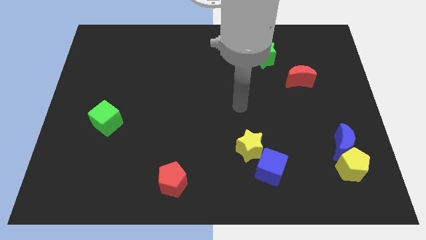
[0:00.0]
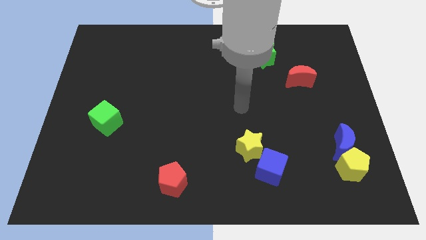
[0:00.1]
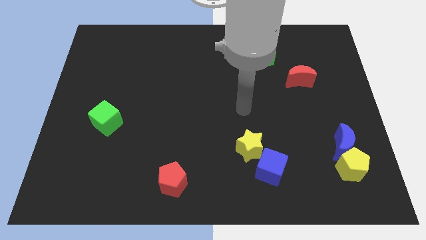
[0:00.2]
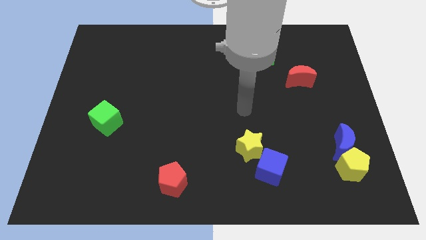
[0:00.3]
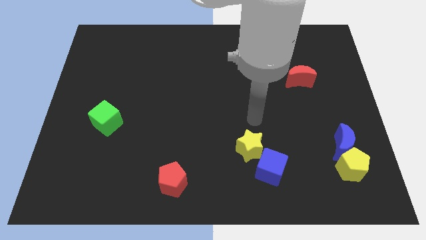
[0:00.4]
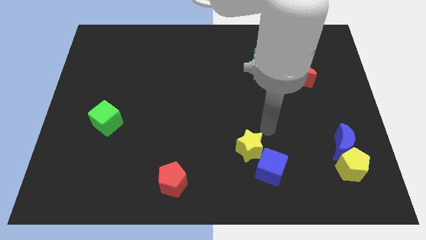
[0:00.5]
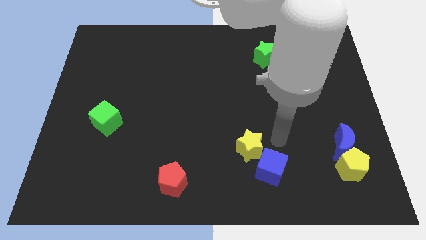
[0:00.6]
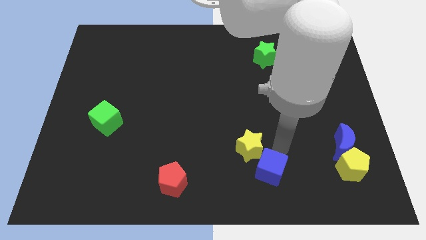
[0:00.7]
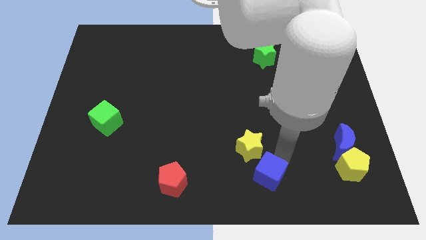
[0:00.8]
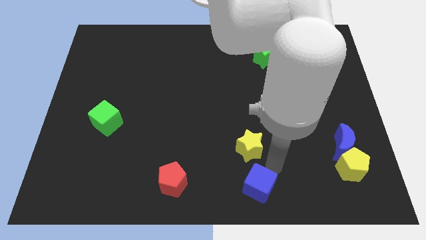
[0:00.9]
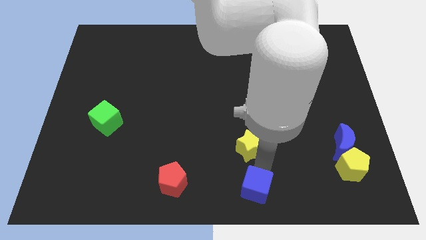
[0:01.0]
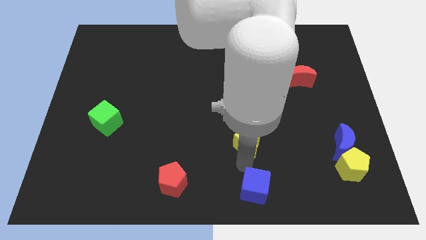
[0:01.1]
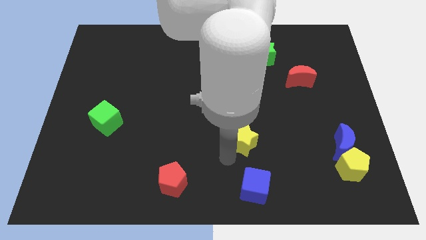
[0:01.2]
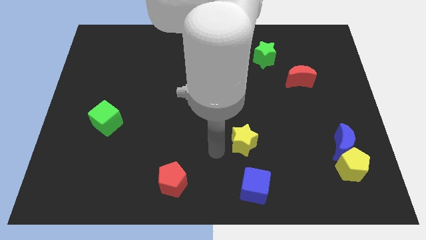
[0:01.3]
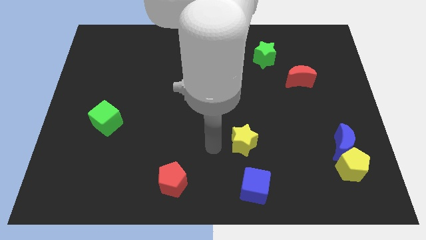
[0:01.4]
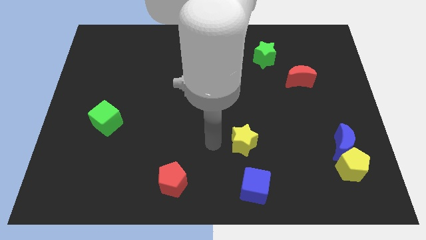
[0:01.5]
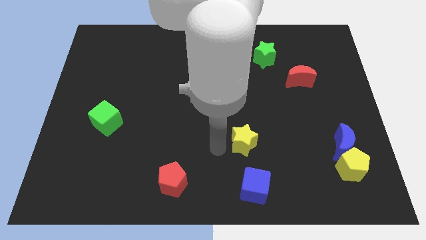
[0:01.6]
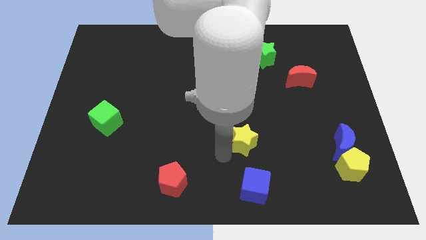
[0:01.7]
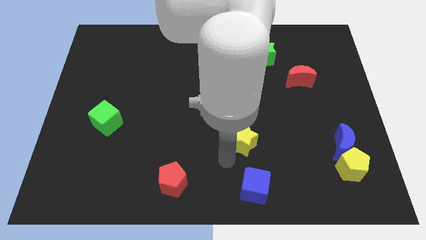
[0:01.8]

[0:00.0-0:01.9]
hit the blue cube

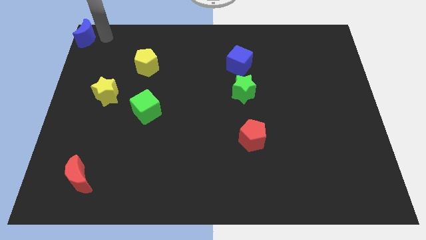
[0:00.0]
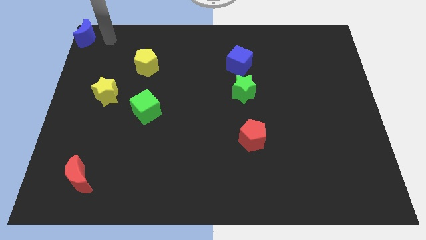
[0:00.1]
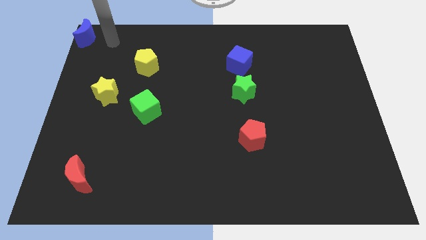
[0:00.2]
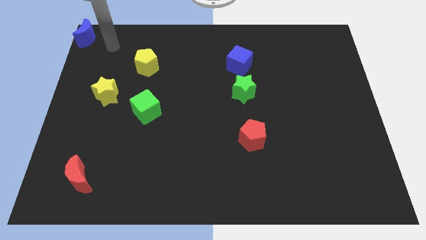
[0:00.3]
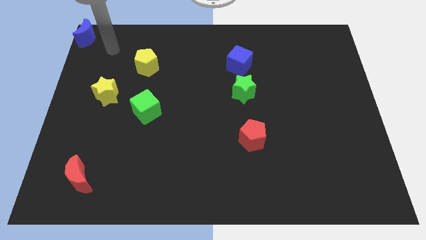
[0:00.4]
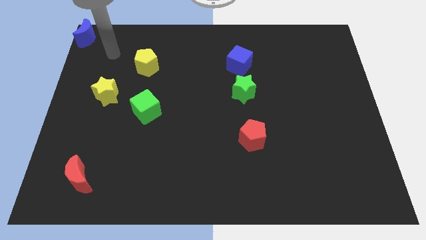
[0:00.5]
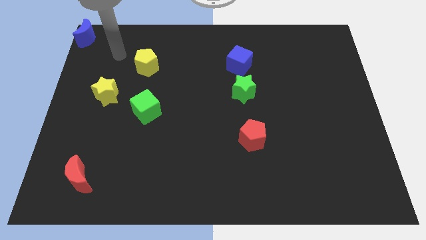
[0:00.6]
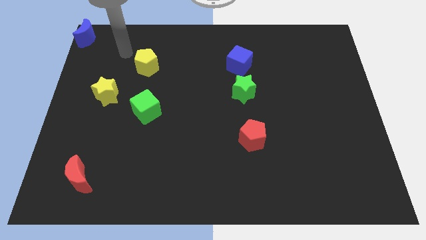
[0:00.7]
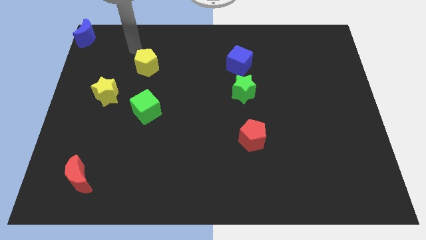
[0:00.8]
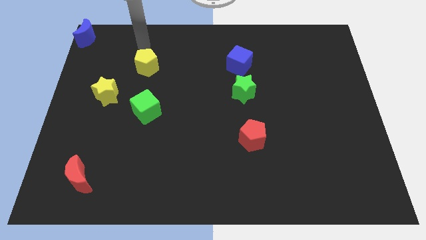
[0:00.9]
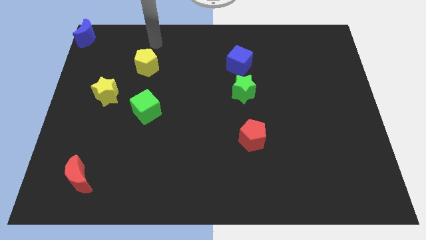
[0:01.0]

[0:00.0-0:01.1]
move your arm away from blue moon

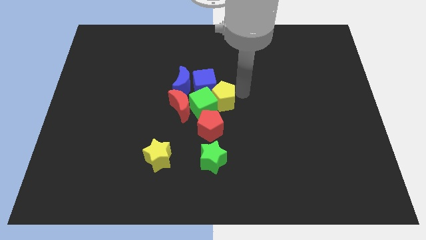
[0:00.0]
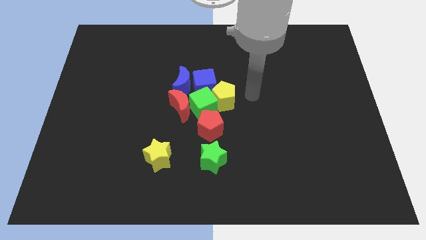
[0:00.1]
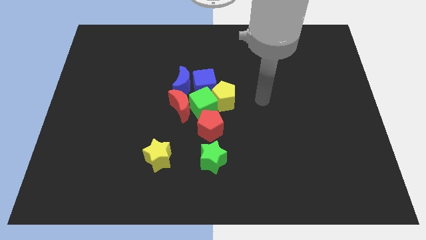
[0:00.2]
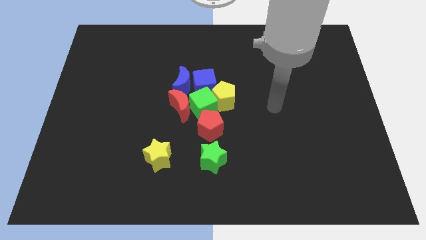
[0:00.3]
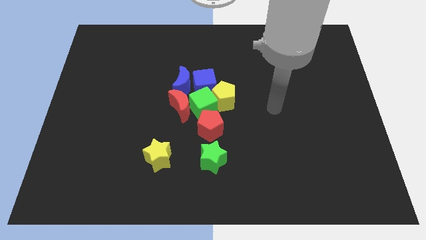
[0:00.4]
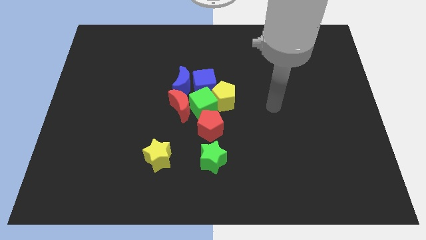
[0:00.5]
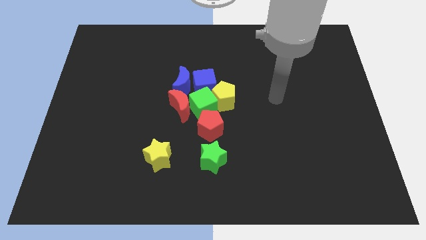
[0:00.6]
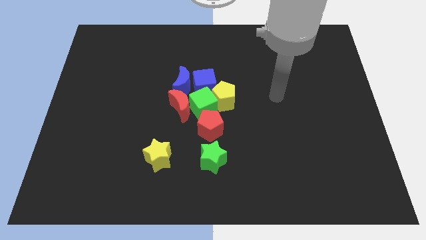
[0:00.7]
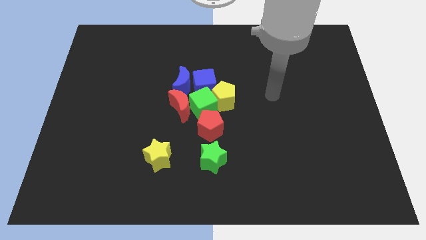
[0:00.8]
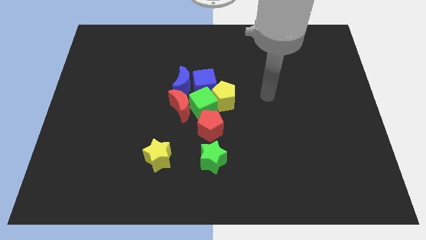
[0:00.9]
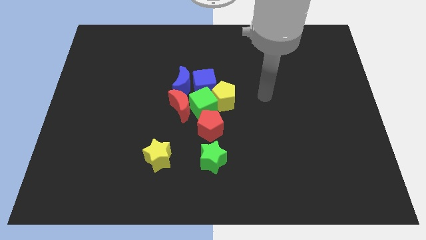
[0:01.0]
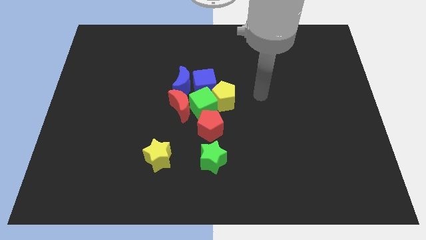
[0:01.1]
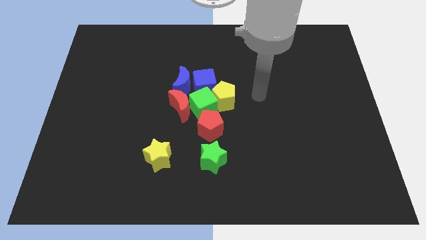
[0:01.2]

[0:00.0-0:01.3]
move your arm away from the yellow pentagon

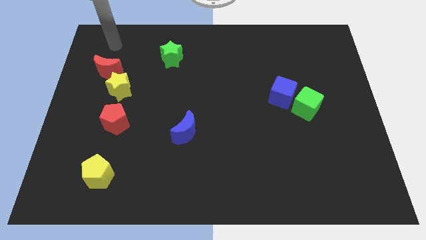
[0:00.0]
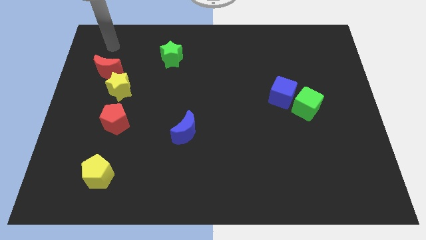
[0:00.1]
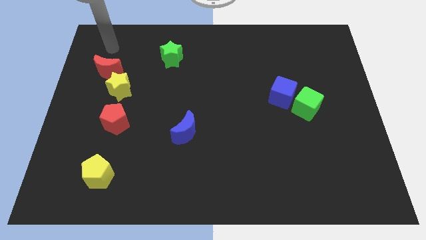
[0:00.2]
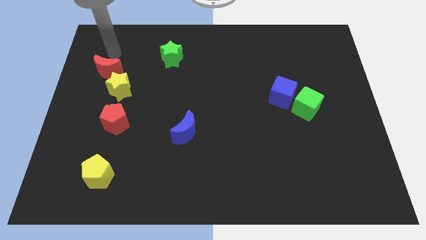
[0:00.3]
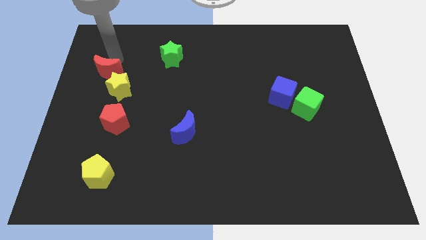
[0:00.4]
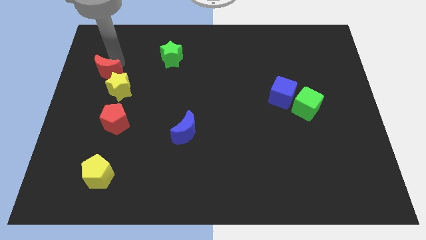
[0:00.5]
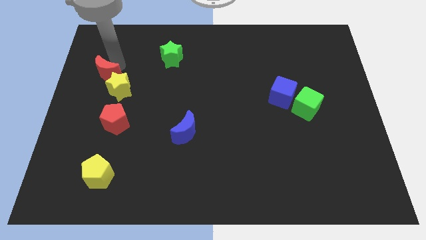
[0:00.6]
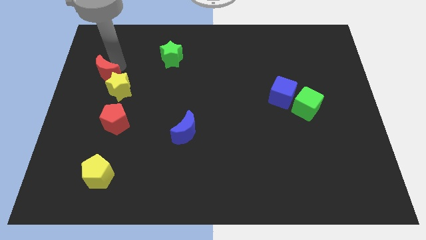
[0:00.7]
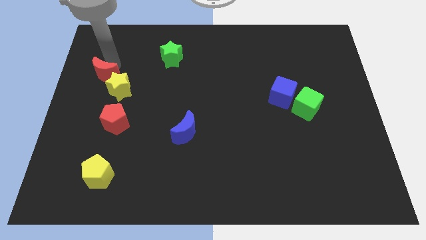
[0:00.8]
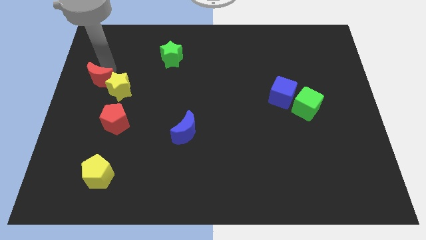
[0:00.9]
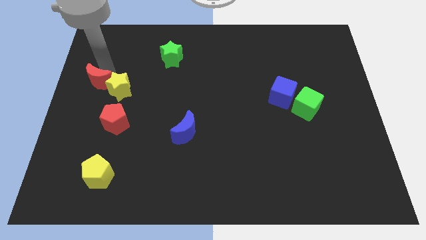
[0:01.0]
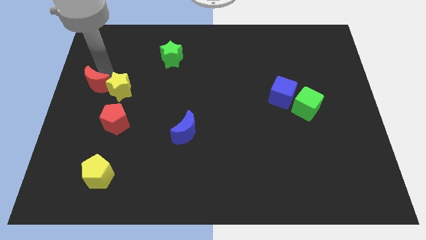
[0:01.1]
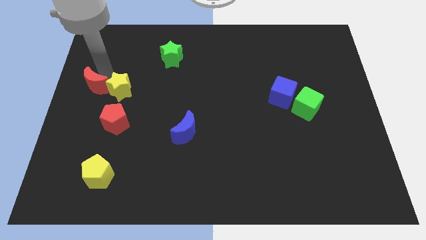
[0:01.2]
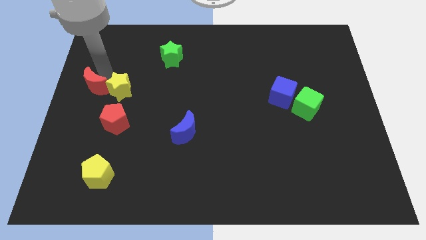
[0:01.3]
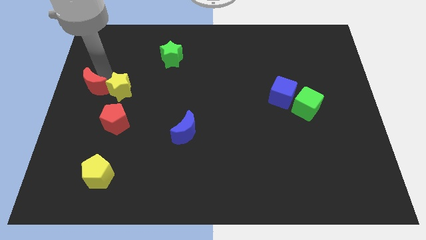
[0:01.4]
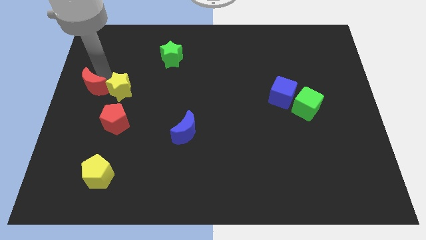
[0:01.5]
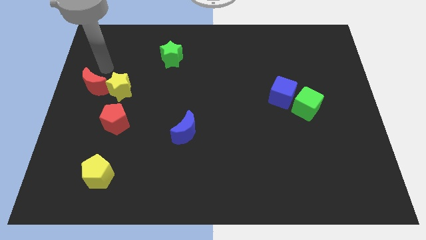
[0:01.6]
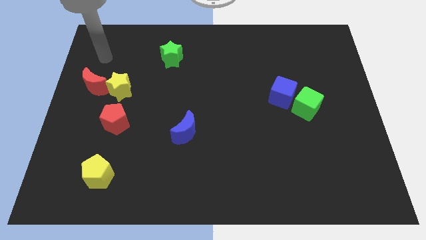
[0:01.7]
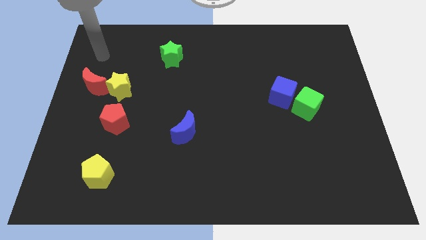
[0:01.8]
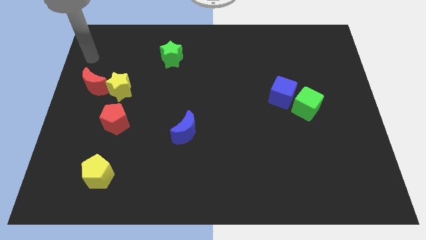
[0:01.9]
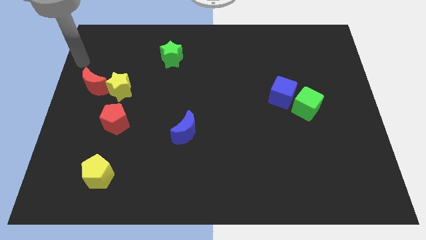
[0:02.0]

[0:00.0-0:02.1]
push the red moon to the left of the yellow star

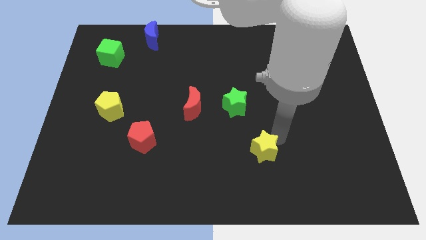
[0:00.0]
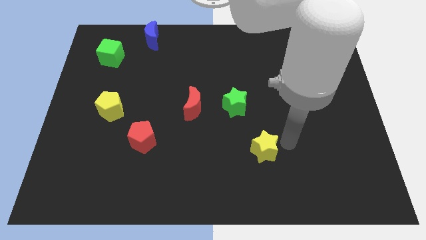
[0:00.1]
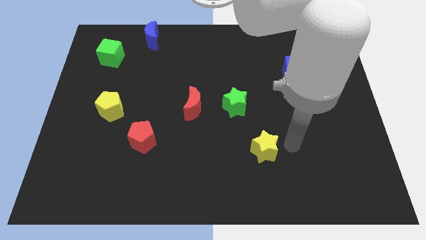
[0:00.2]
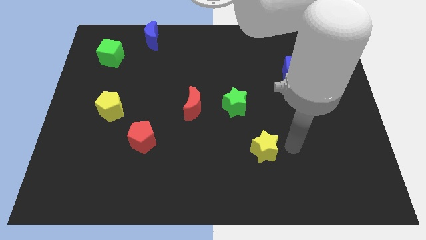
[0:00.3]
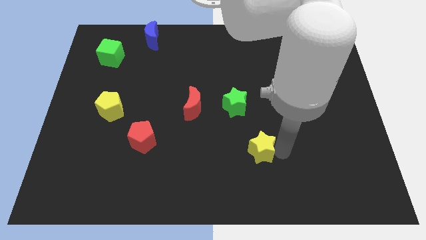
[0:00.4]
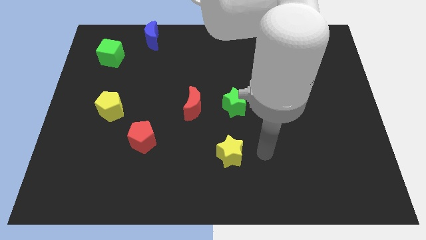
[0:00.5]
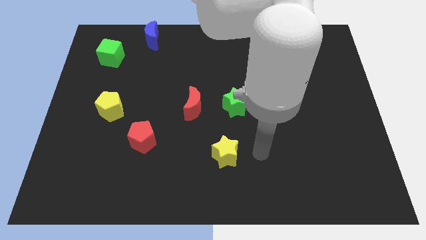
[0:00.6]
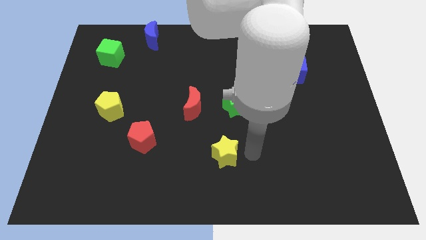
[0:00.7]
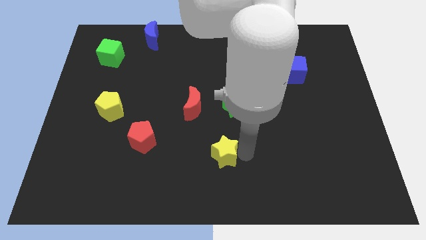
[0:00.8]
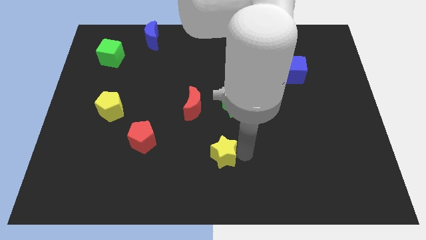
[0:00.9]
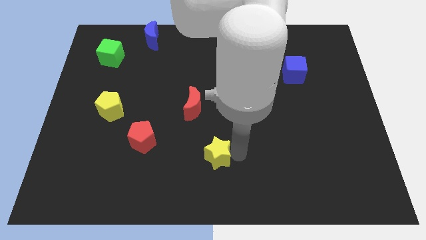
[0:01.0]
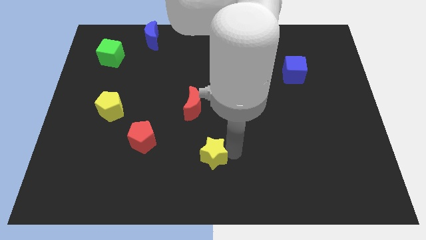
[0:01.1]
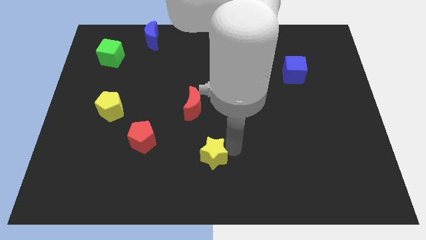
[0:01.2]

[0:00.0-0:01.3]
move the yellow star diagonally bottom left to the green star

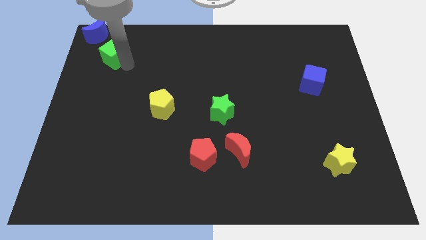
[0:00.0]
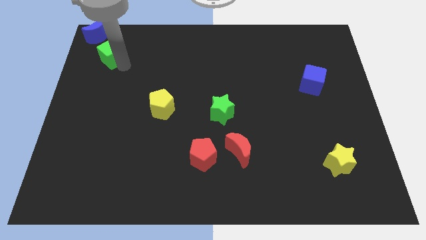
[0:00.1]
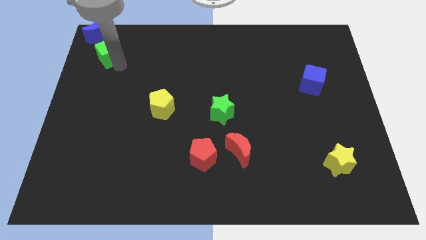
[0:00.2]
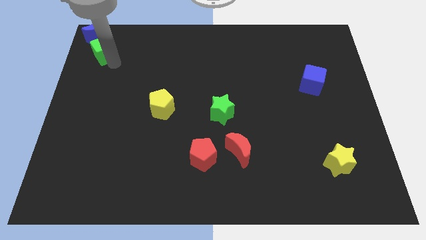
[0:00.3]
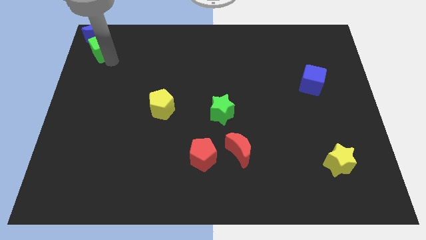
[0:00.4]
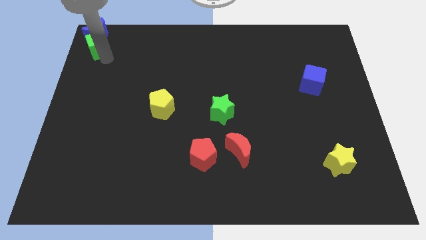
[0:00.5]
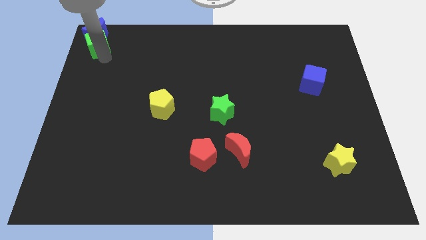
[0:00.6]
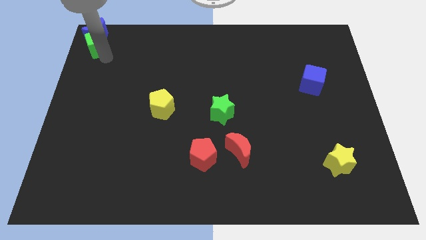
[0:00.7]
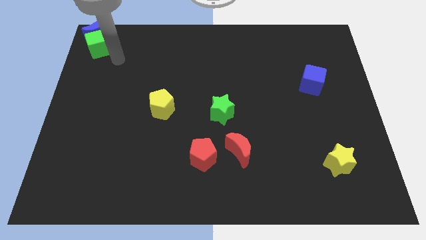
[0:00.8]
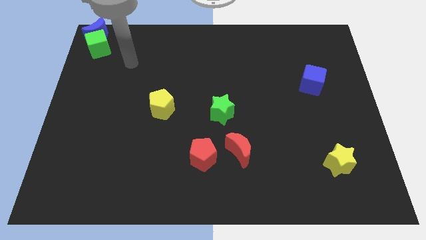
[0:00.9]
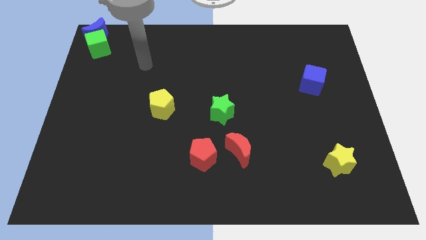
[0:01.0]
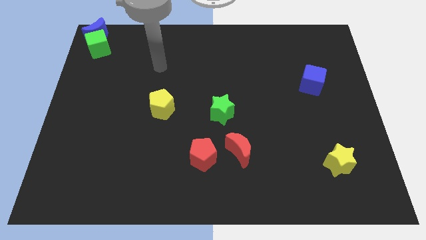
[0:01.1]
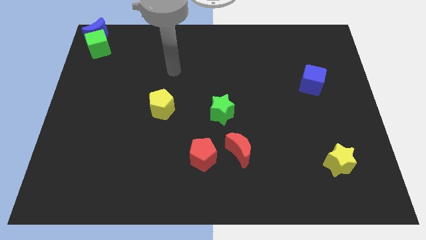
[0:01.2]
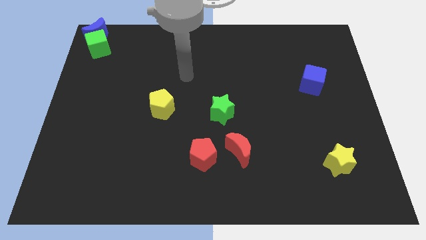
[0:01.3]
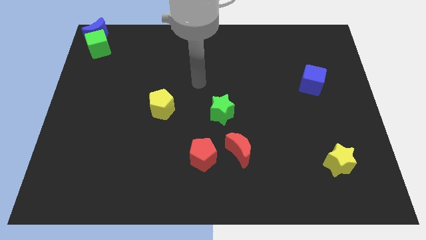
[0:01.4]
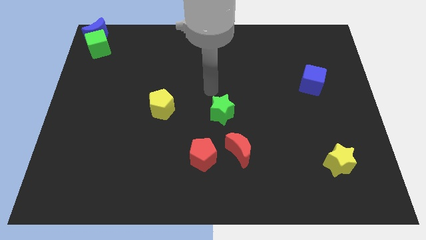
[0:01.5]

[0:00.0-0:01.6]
move the green cube into the blue crescent
